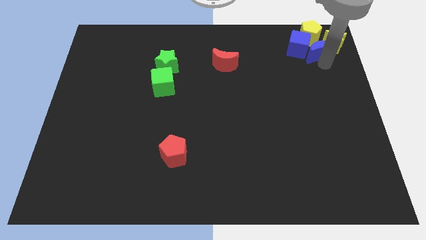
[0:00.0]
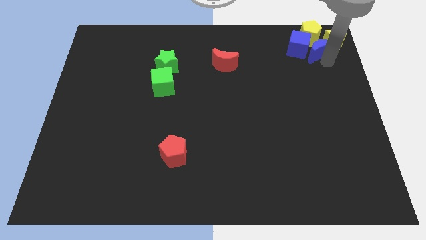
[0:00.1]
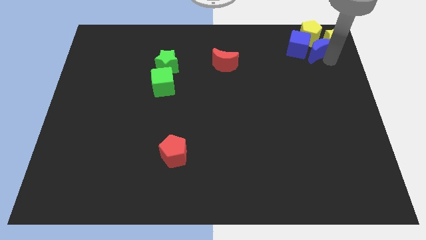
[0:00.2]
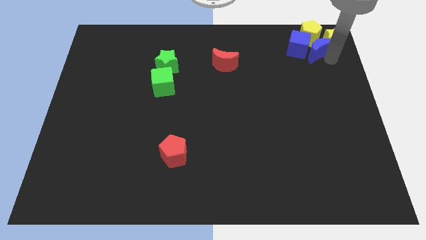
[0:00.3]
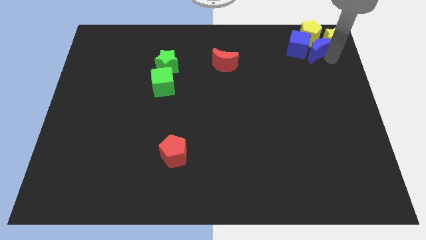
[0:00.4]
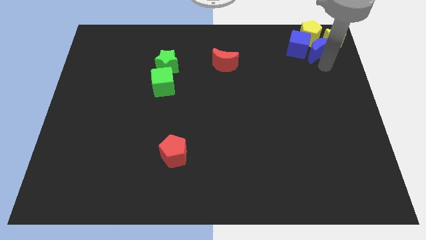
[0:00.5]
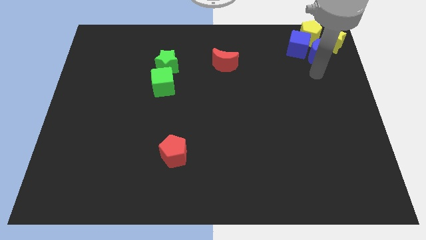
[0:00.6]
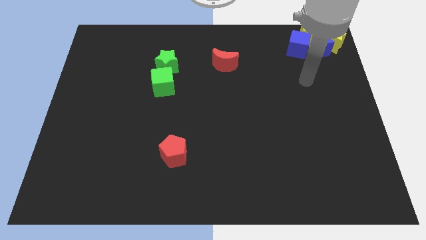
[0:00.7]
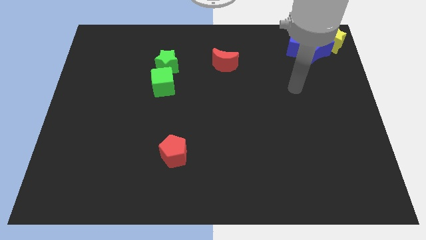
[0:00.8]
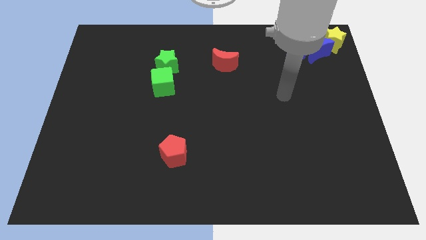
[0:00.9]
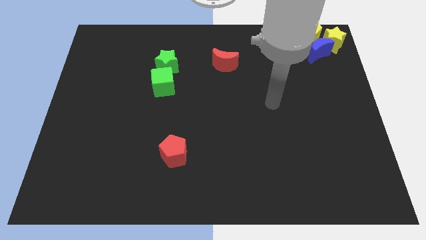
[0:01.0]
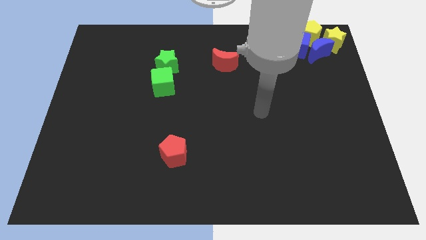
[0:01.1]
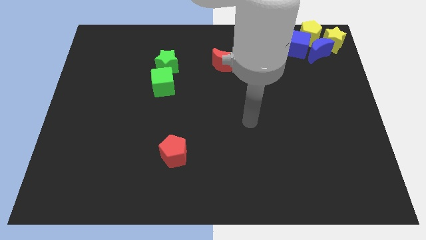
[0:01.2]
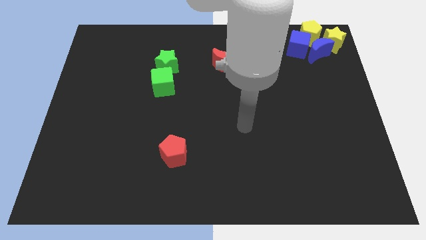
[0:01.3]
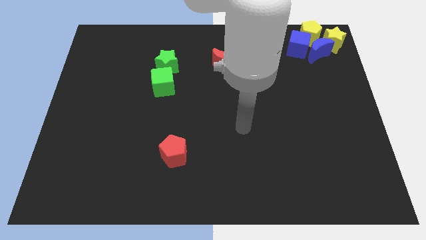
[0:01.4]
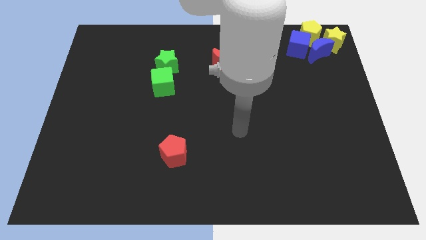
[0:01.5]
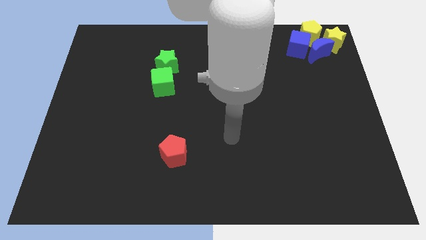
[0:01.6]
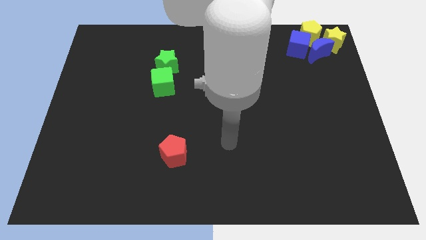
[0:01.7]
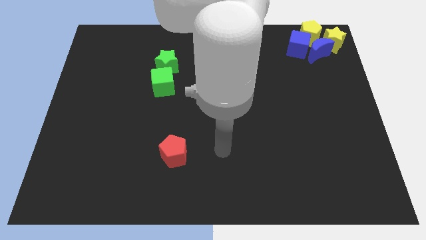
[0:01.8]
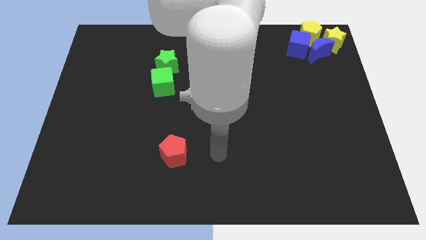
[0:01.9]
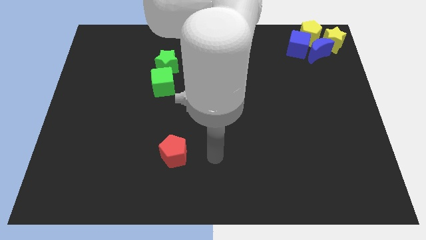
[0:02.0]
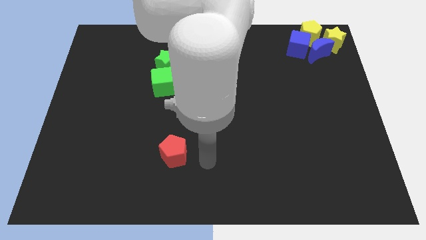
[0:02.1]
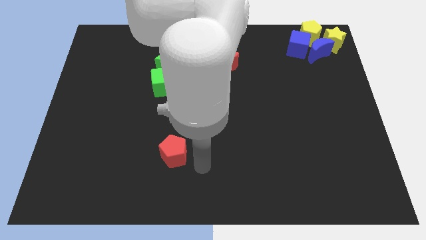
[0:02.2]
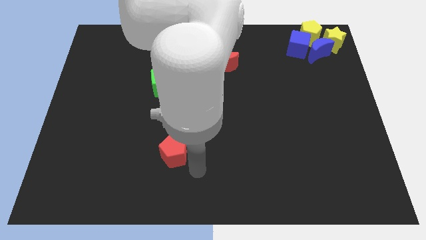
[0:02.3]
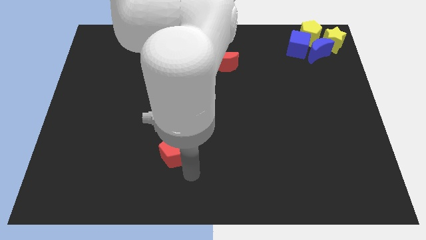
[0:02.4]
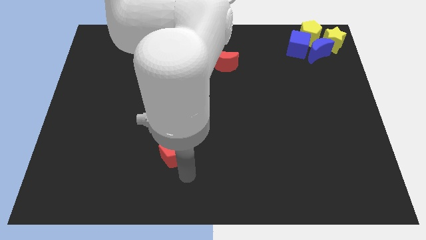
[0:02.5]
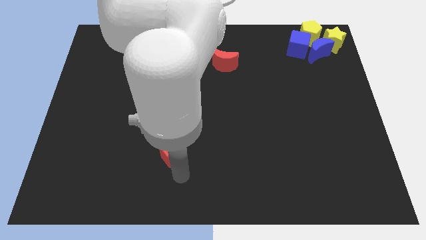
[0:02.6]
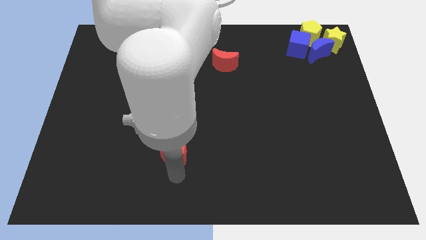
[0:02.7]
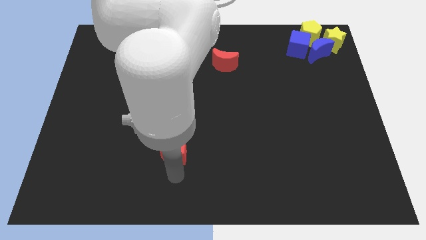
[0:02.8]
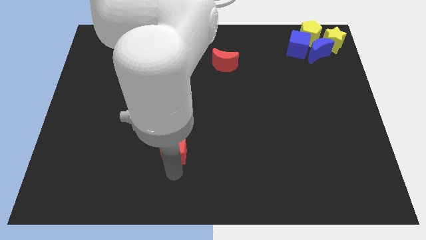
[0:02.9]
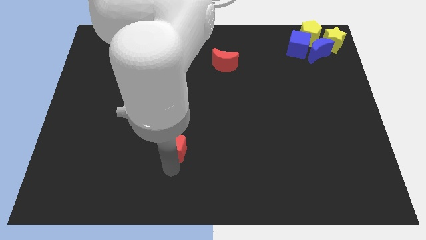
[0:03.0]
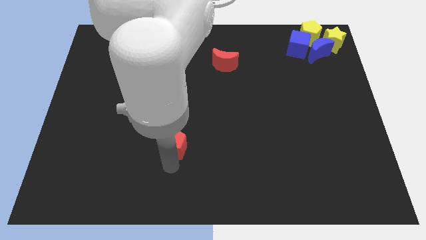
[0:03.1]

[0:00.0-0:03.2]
place the arm below the red pentagon

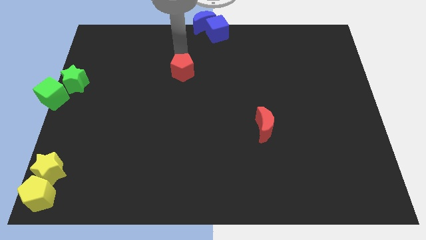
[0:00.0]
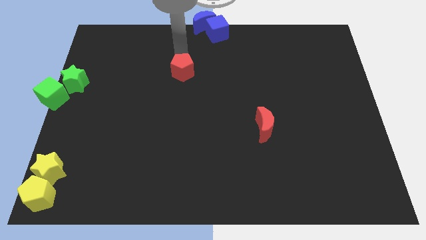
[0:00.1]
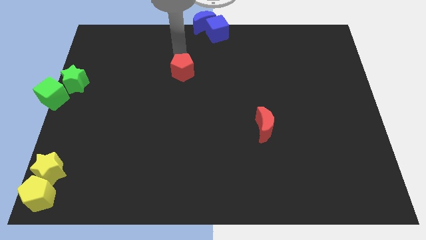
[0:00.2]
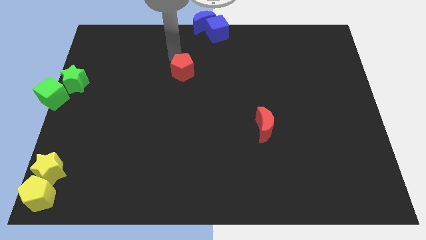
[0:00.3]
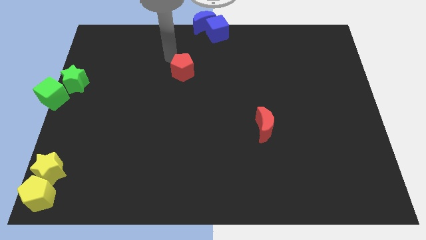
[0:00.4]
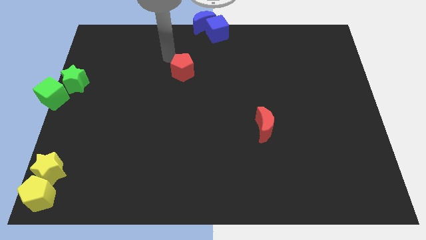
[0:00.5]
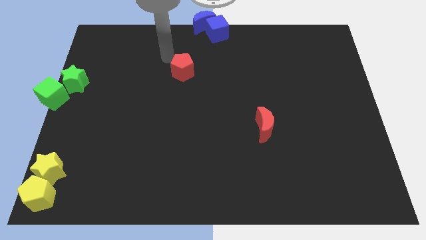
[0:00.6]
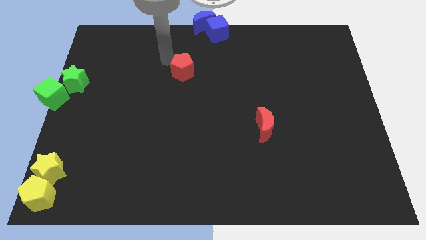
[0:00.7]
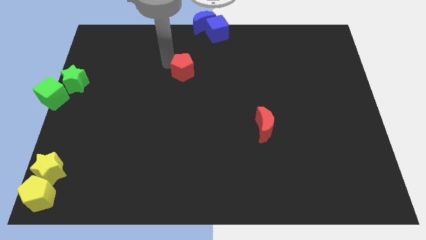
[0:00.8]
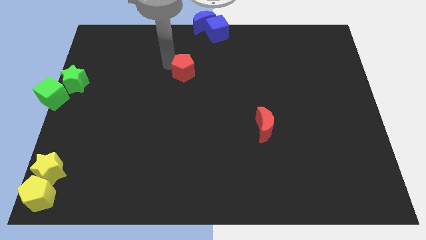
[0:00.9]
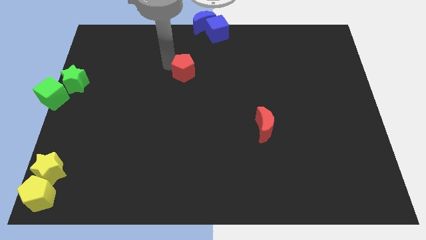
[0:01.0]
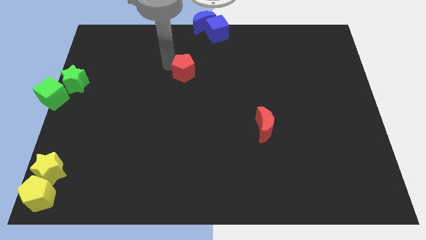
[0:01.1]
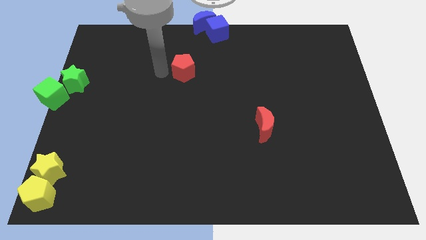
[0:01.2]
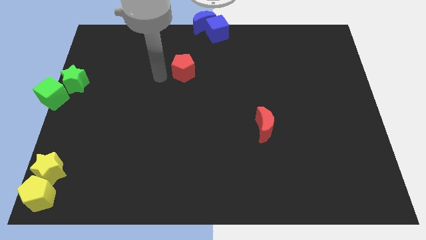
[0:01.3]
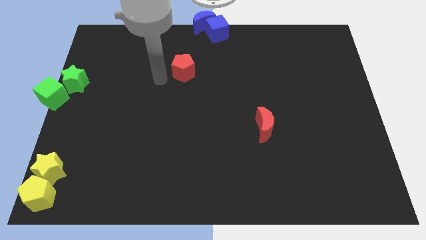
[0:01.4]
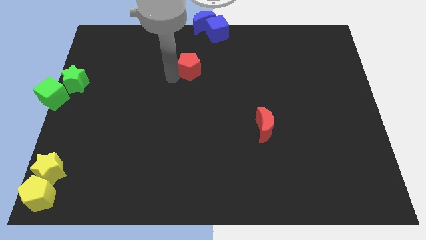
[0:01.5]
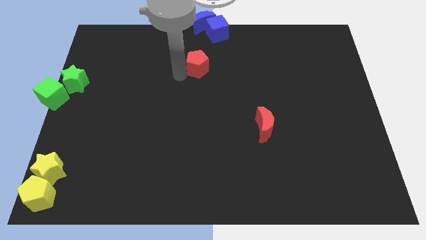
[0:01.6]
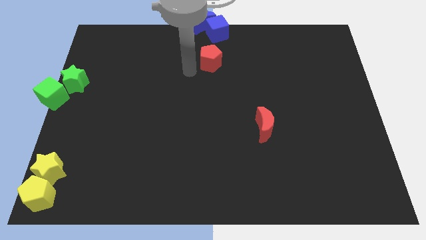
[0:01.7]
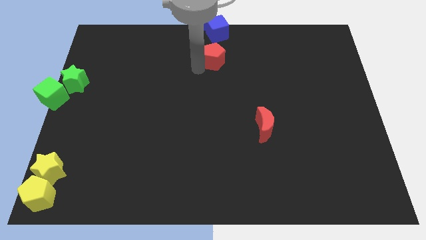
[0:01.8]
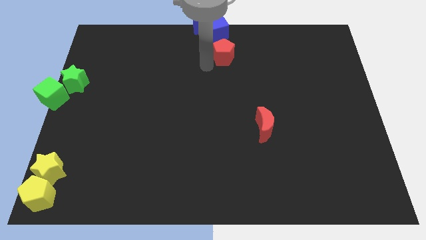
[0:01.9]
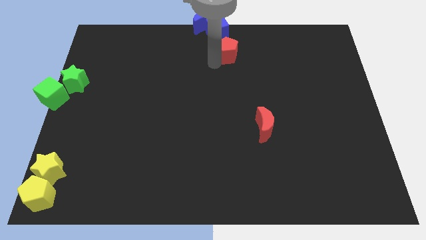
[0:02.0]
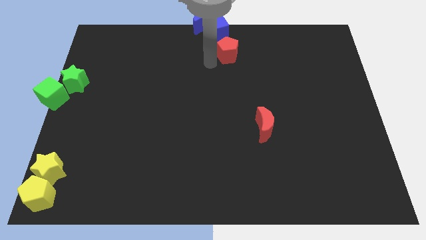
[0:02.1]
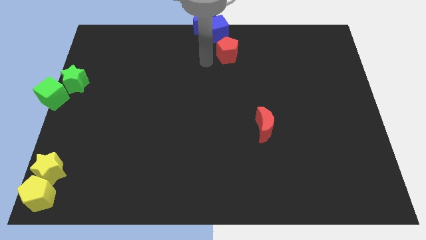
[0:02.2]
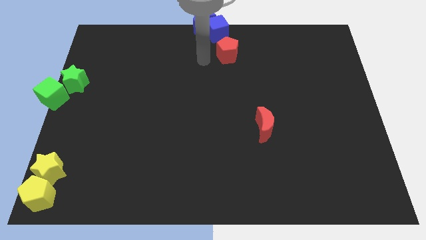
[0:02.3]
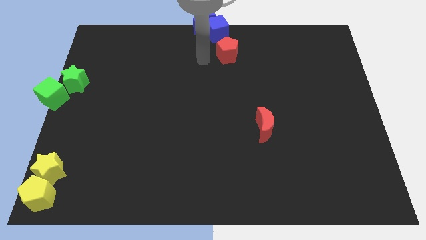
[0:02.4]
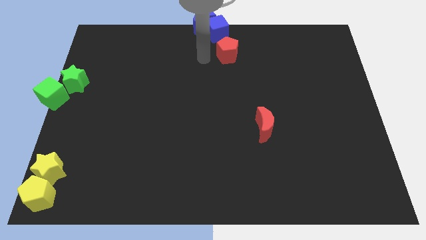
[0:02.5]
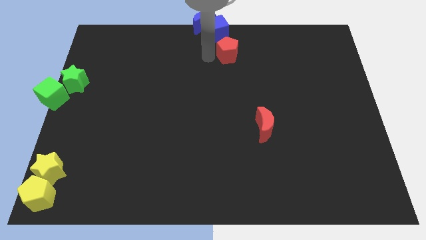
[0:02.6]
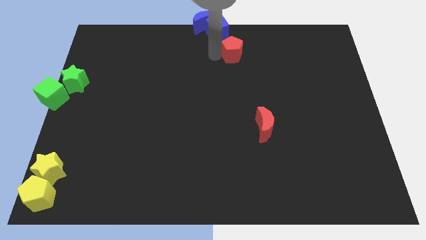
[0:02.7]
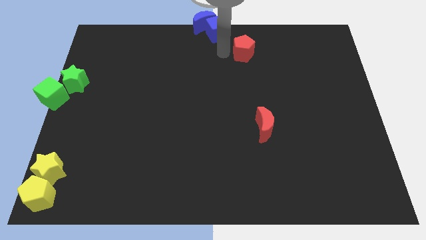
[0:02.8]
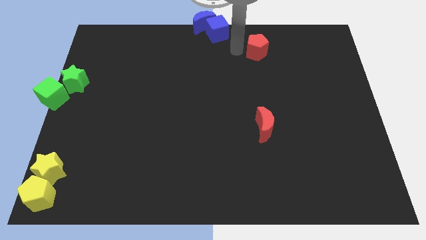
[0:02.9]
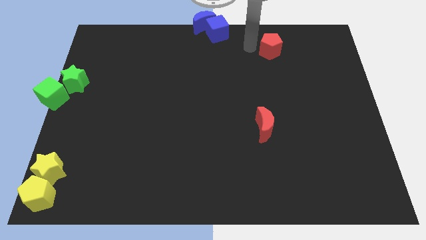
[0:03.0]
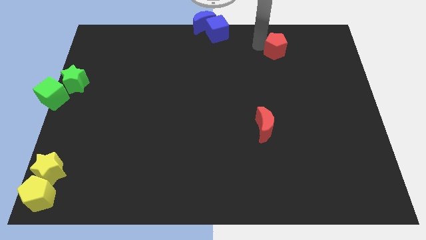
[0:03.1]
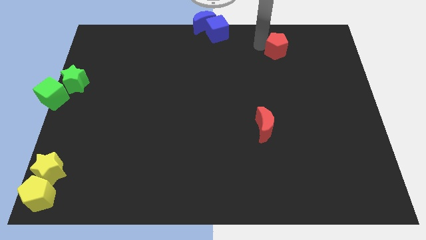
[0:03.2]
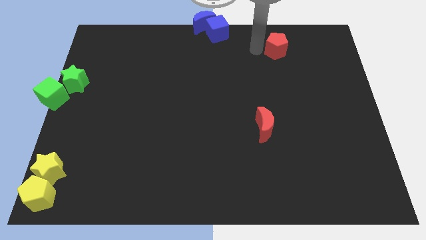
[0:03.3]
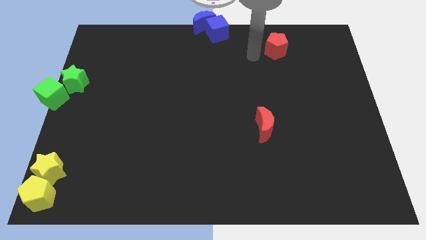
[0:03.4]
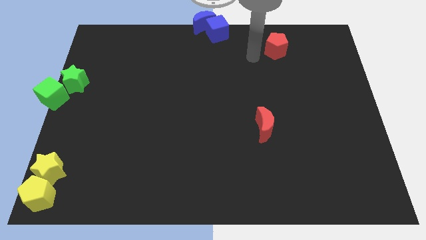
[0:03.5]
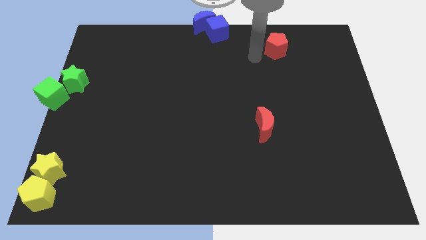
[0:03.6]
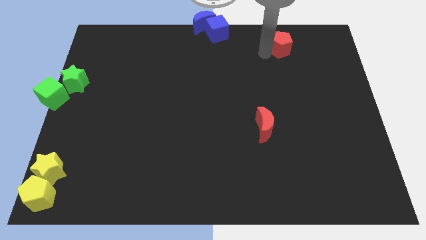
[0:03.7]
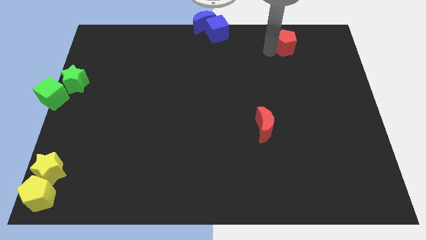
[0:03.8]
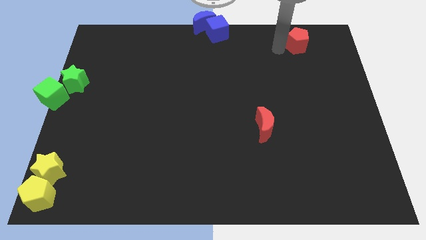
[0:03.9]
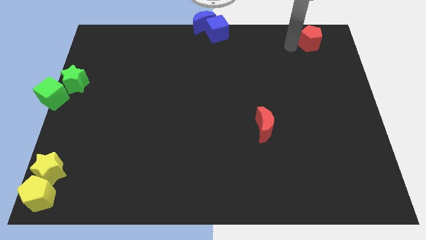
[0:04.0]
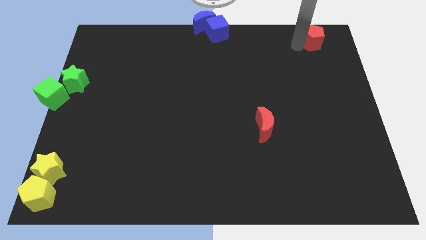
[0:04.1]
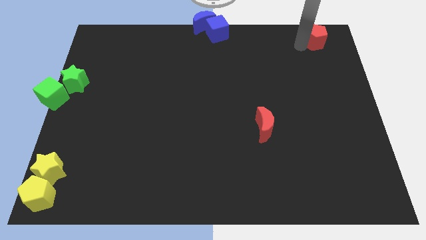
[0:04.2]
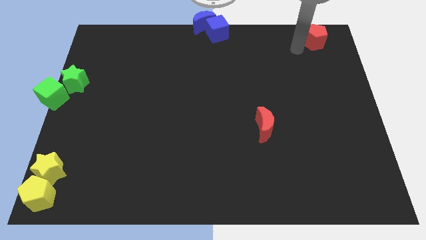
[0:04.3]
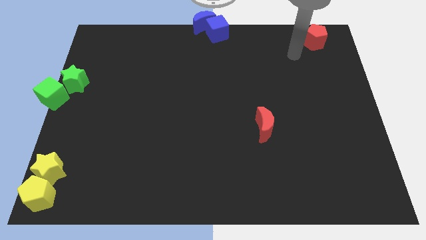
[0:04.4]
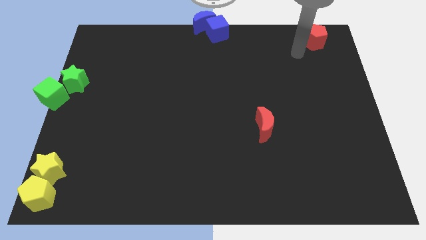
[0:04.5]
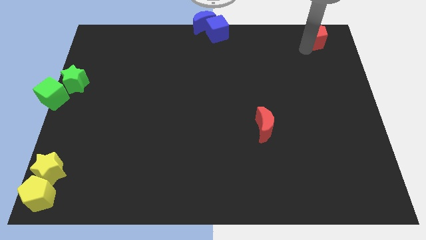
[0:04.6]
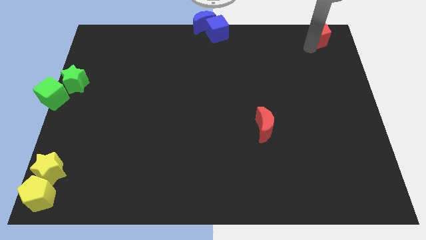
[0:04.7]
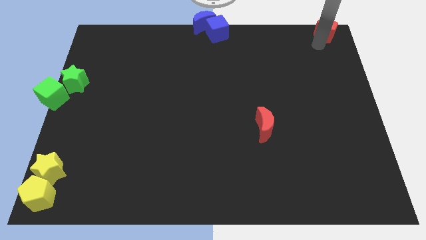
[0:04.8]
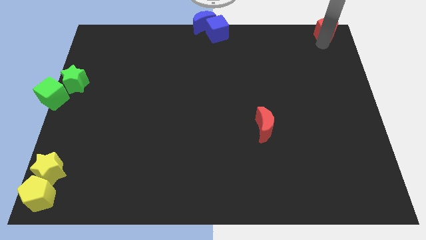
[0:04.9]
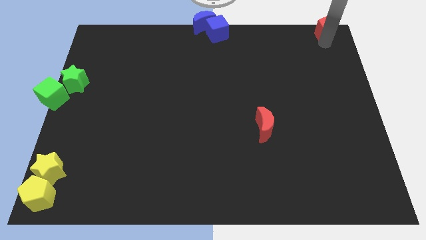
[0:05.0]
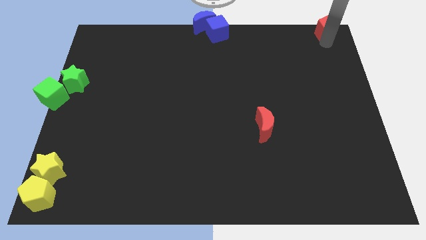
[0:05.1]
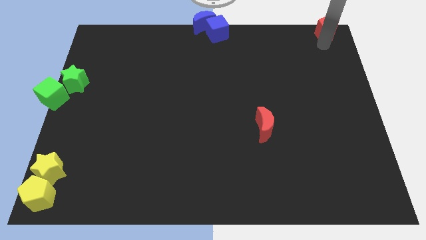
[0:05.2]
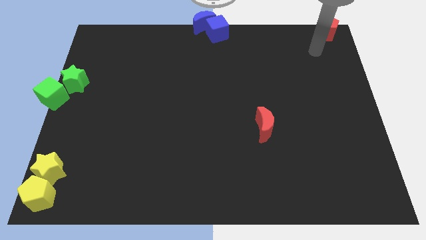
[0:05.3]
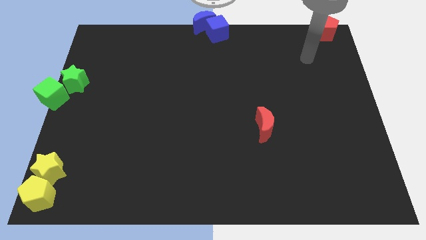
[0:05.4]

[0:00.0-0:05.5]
place the red pentagon to the top right

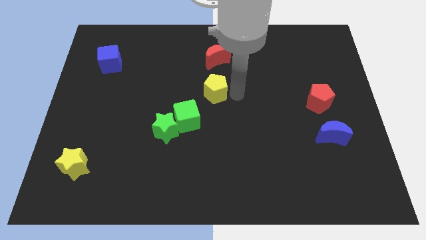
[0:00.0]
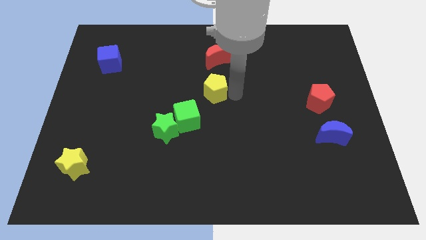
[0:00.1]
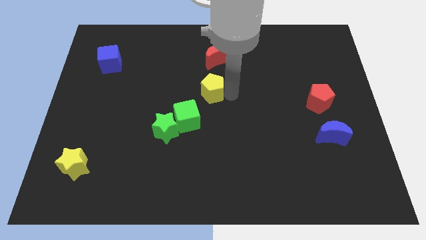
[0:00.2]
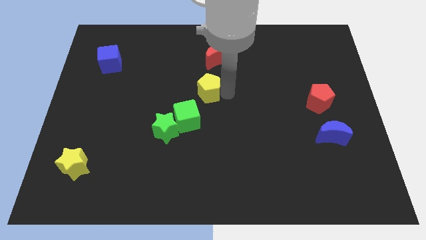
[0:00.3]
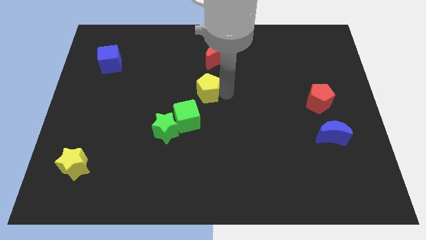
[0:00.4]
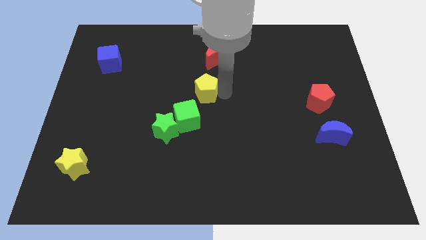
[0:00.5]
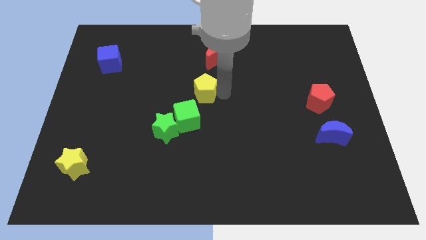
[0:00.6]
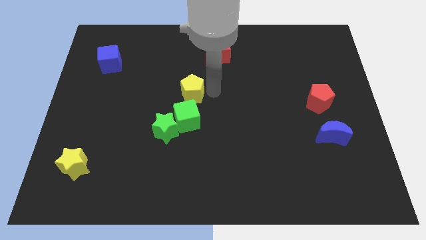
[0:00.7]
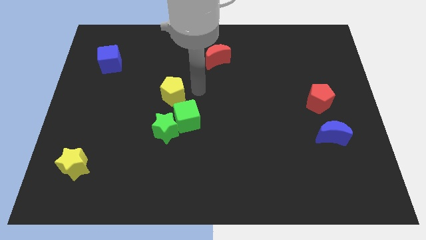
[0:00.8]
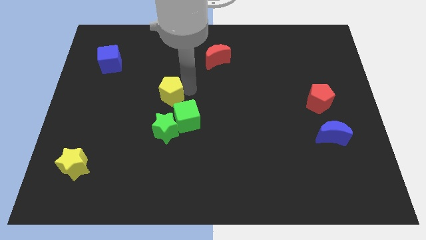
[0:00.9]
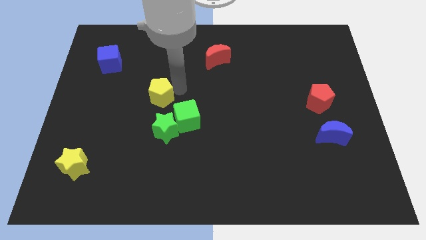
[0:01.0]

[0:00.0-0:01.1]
slide yellow pentagon to top left of green cube
